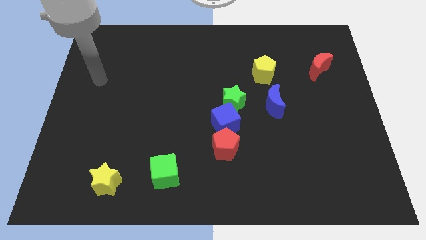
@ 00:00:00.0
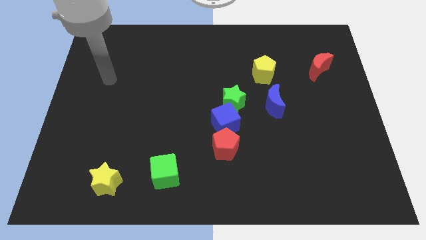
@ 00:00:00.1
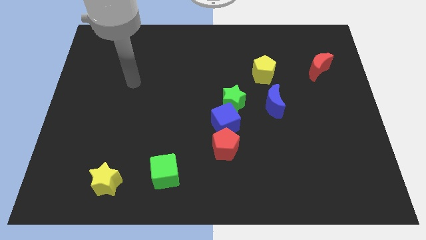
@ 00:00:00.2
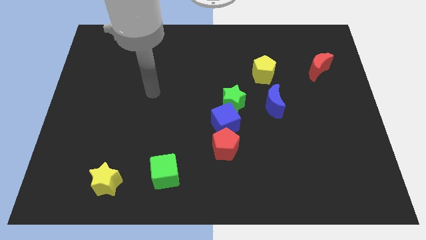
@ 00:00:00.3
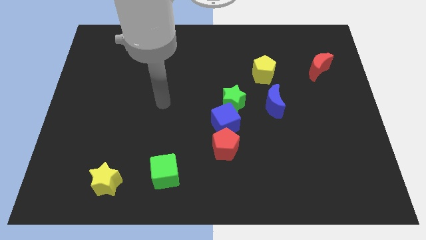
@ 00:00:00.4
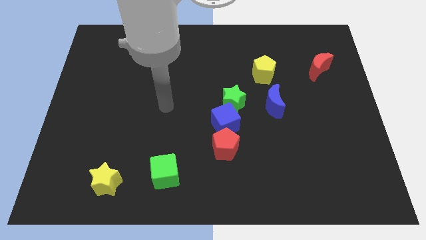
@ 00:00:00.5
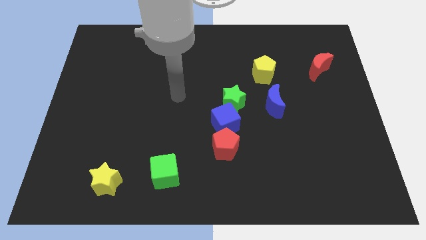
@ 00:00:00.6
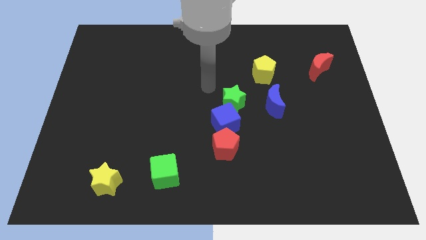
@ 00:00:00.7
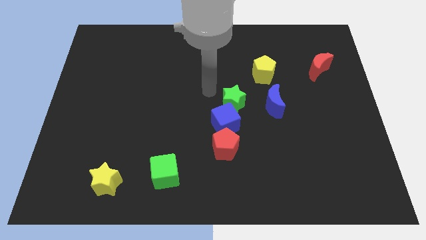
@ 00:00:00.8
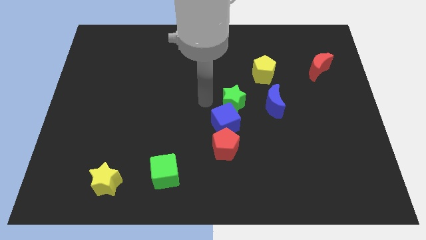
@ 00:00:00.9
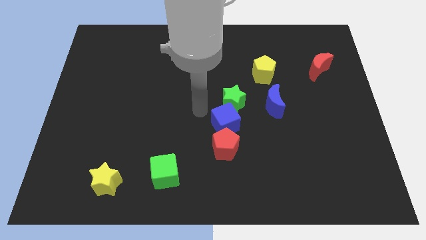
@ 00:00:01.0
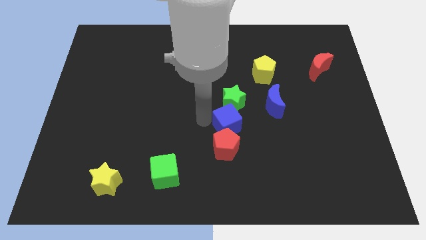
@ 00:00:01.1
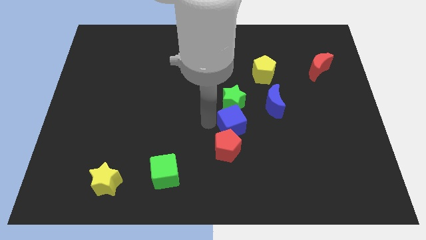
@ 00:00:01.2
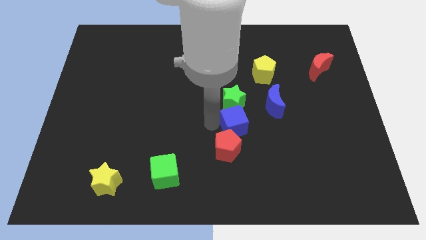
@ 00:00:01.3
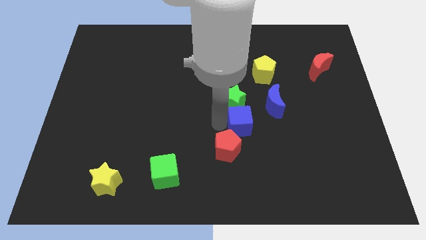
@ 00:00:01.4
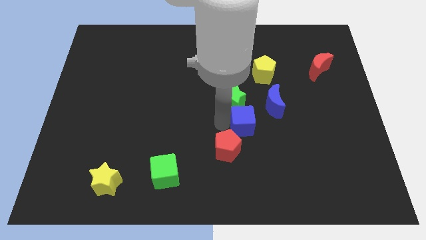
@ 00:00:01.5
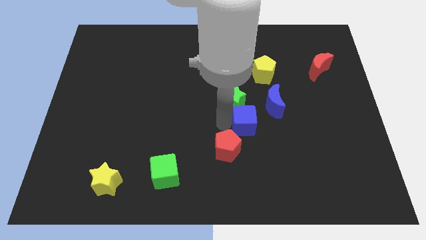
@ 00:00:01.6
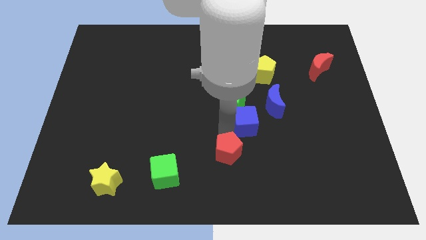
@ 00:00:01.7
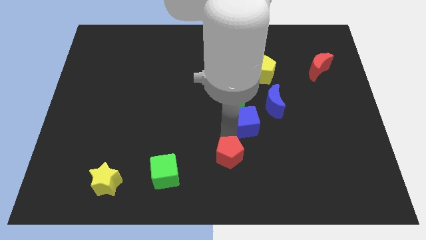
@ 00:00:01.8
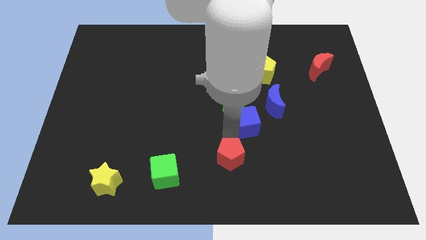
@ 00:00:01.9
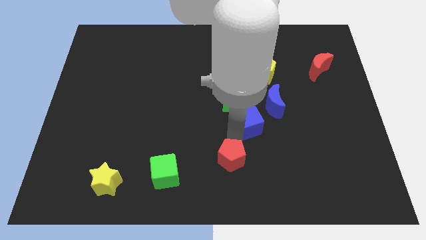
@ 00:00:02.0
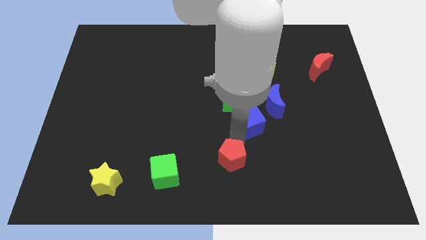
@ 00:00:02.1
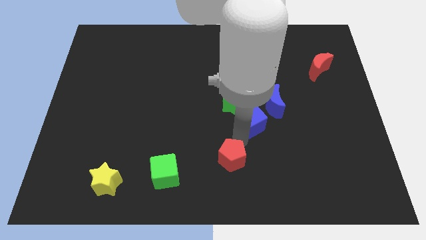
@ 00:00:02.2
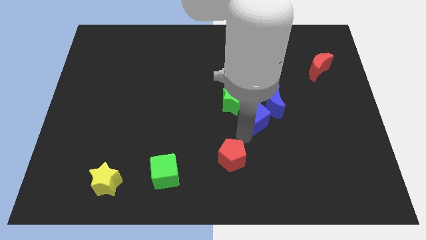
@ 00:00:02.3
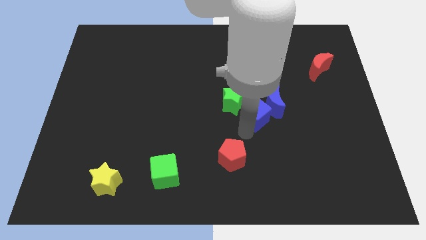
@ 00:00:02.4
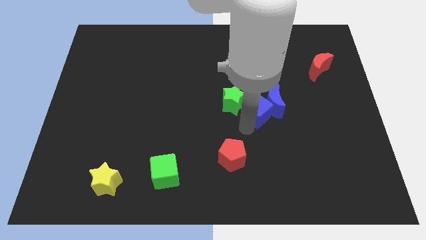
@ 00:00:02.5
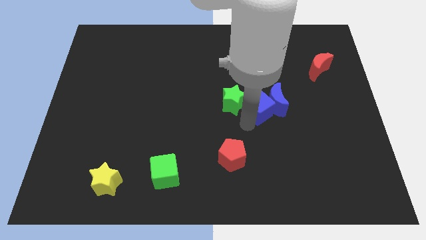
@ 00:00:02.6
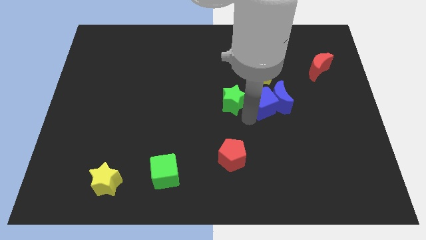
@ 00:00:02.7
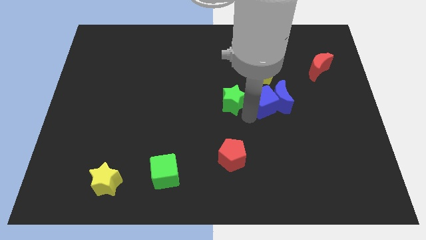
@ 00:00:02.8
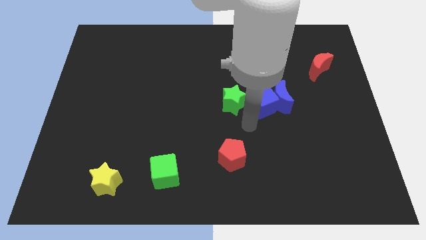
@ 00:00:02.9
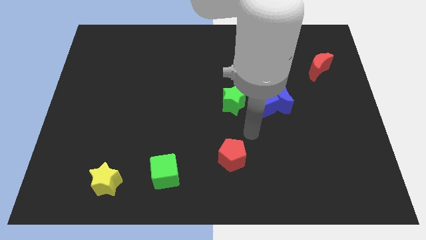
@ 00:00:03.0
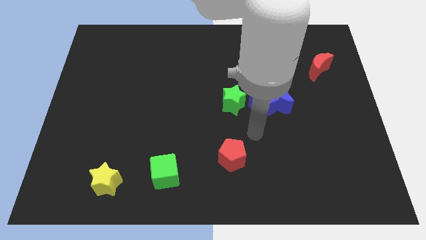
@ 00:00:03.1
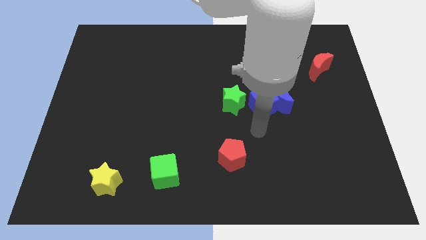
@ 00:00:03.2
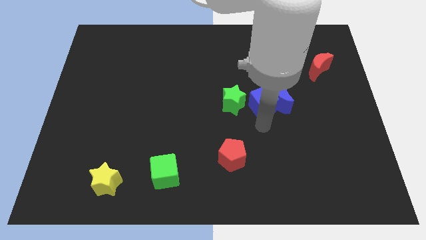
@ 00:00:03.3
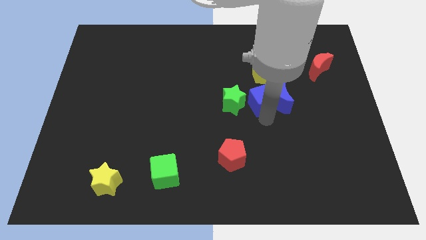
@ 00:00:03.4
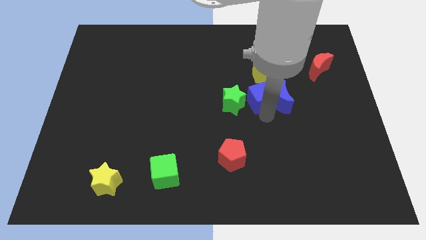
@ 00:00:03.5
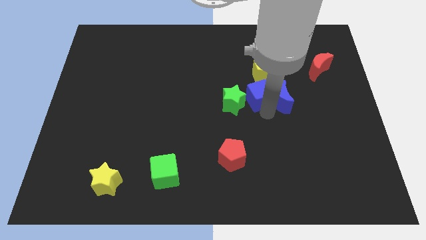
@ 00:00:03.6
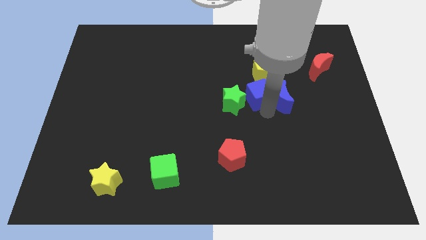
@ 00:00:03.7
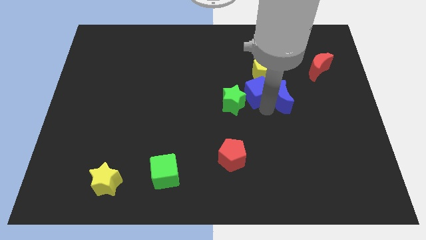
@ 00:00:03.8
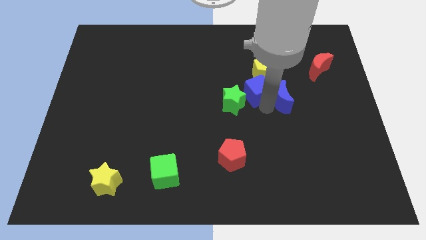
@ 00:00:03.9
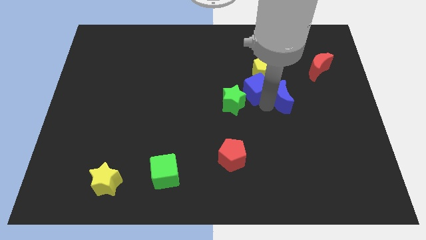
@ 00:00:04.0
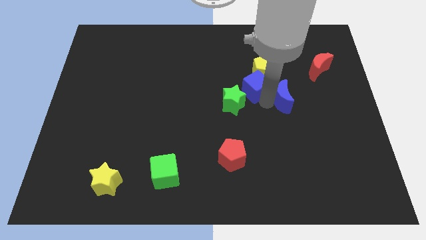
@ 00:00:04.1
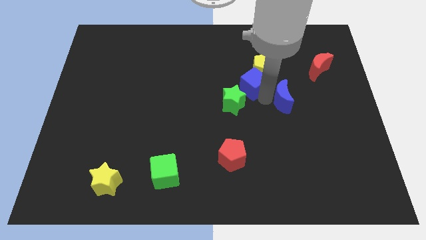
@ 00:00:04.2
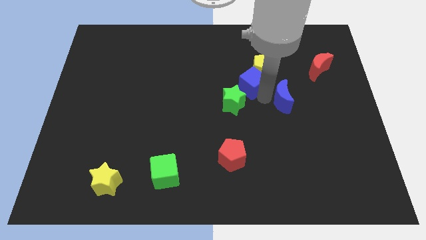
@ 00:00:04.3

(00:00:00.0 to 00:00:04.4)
put the blue cube next to the yellow pentagon

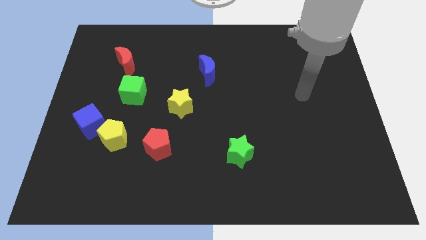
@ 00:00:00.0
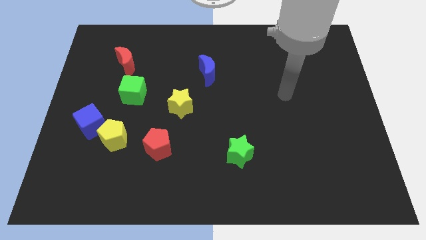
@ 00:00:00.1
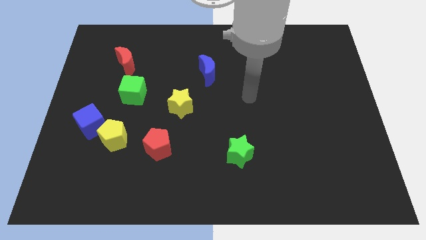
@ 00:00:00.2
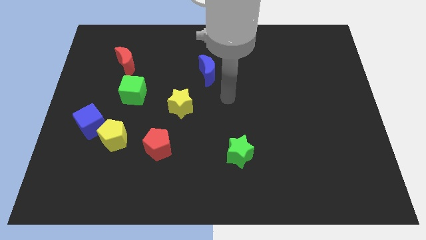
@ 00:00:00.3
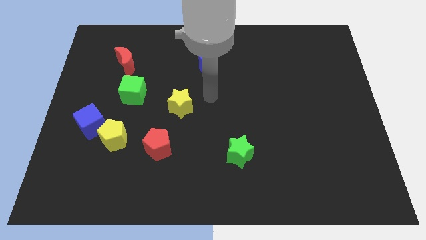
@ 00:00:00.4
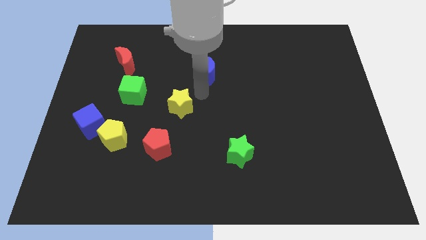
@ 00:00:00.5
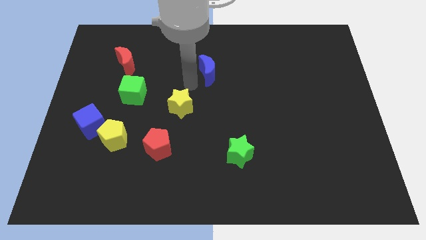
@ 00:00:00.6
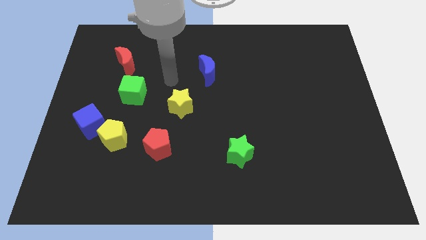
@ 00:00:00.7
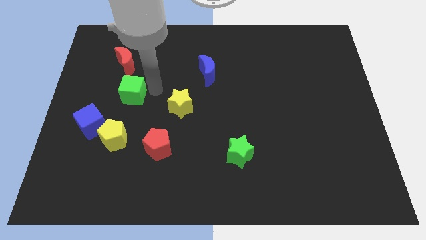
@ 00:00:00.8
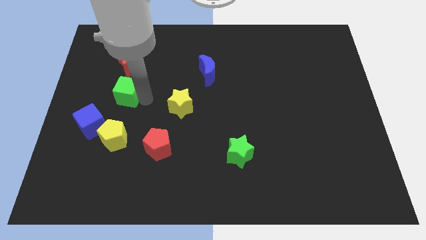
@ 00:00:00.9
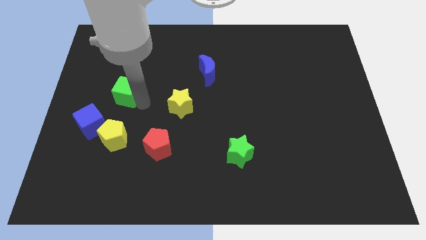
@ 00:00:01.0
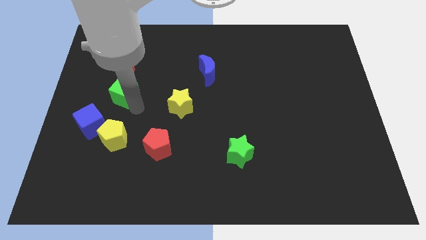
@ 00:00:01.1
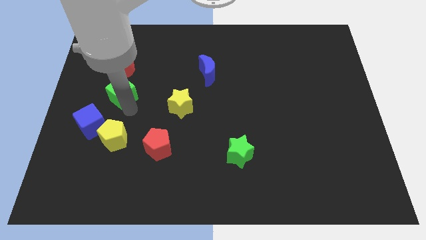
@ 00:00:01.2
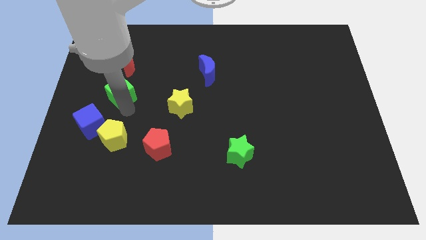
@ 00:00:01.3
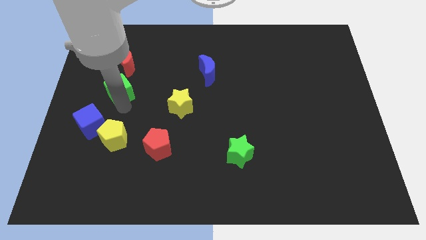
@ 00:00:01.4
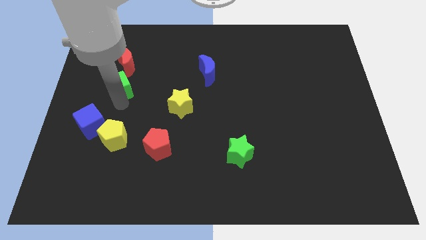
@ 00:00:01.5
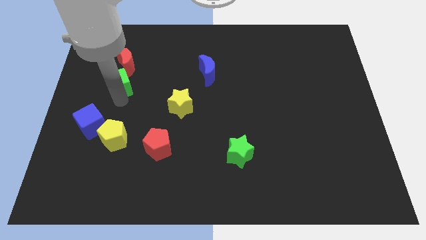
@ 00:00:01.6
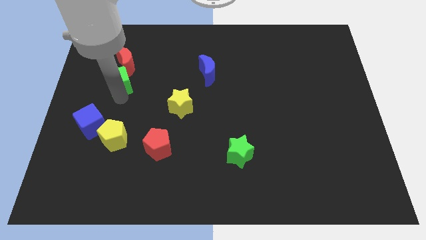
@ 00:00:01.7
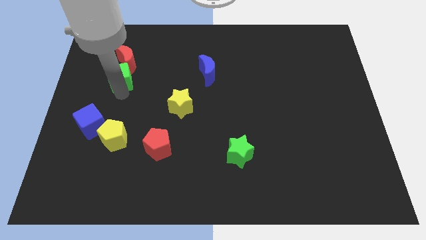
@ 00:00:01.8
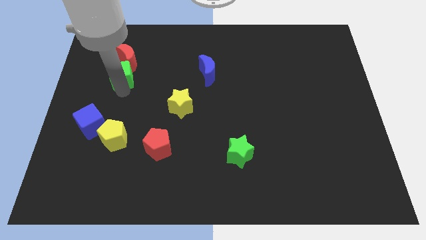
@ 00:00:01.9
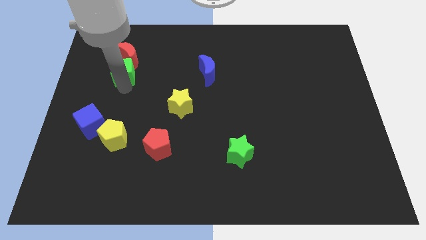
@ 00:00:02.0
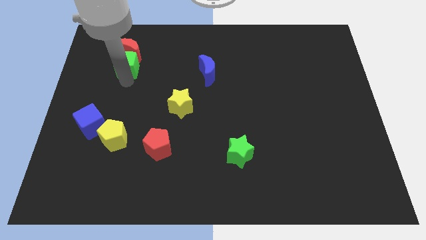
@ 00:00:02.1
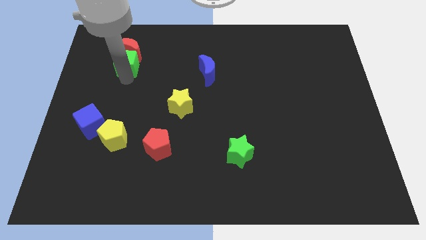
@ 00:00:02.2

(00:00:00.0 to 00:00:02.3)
put the green cube towards the red moon

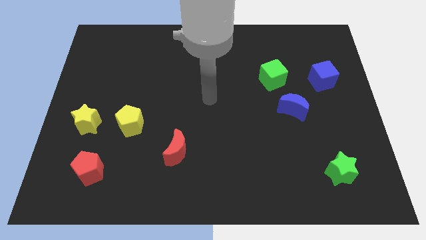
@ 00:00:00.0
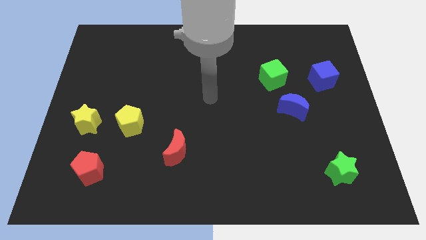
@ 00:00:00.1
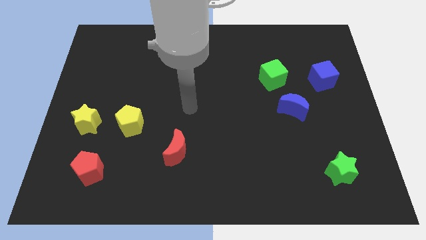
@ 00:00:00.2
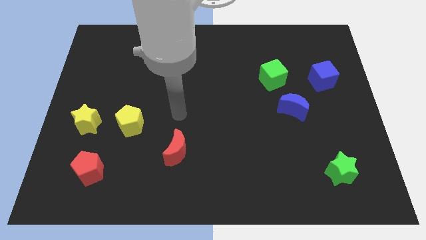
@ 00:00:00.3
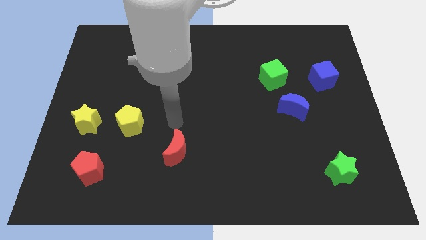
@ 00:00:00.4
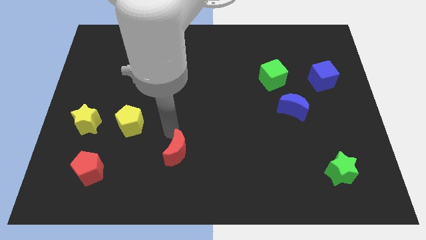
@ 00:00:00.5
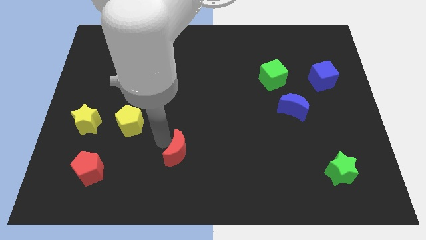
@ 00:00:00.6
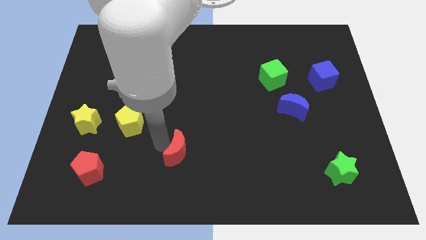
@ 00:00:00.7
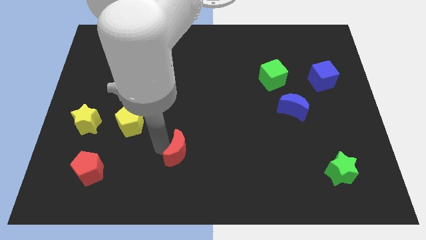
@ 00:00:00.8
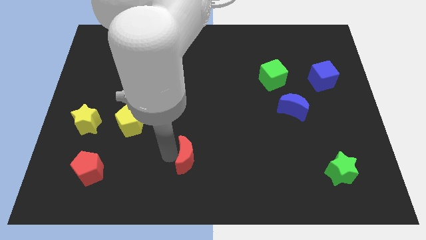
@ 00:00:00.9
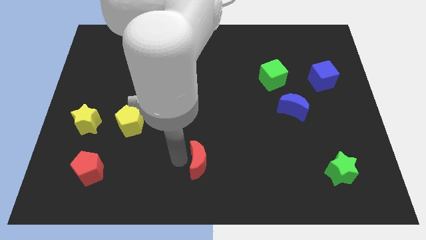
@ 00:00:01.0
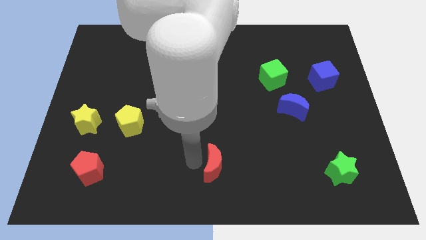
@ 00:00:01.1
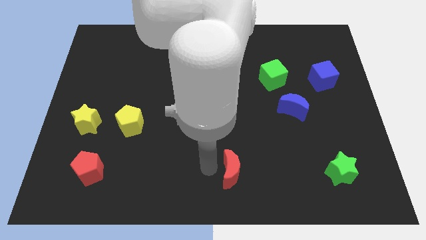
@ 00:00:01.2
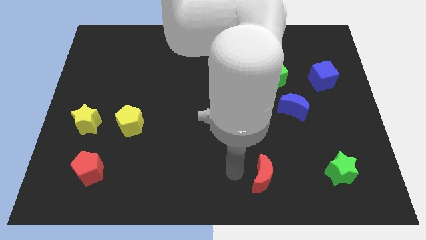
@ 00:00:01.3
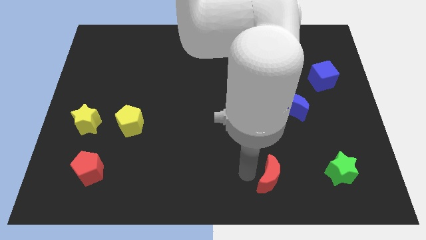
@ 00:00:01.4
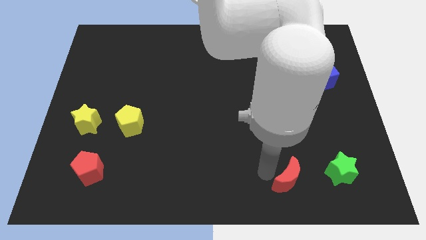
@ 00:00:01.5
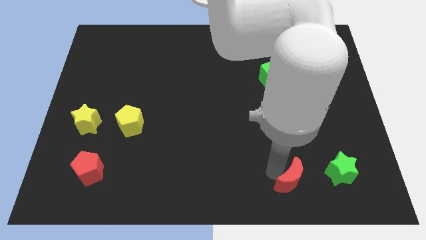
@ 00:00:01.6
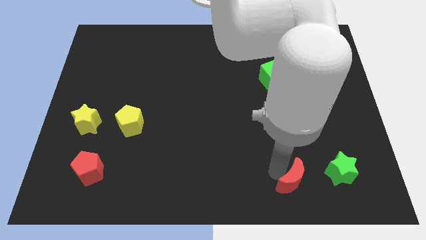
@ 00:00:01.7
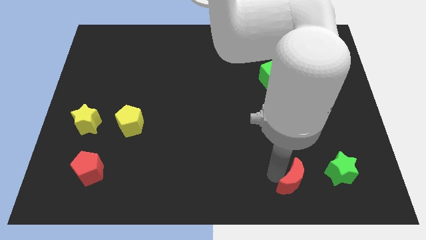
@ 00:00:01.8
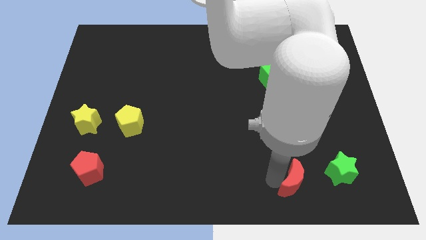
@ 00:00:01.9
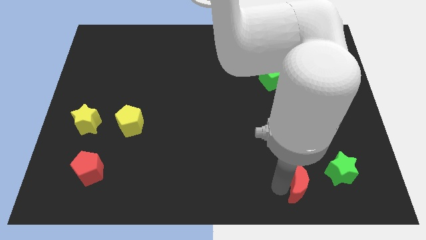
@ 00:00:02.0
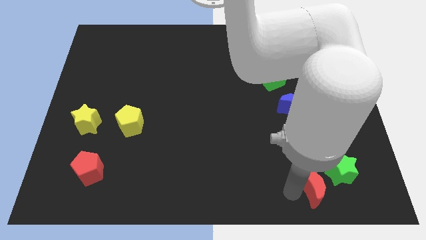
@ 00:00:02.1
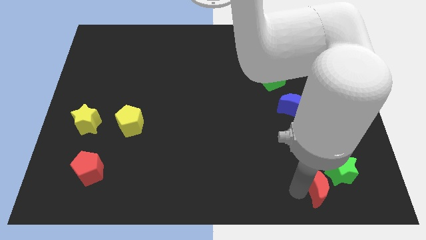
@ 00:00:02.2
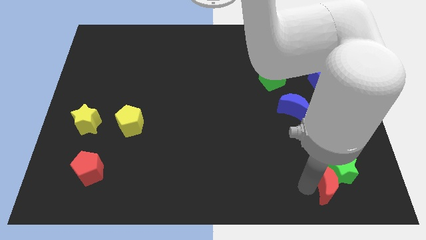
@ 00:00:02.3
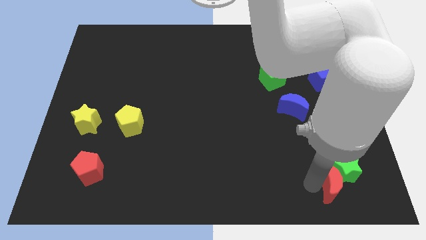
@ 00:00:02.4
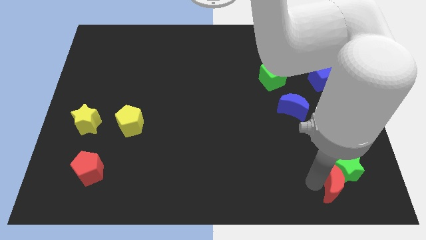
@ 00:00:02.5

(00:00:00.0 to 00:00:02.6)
slide the red moon next to the green star
